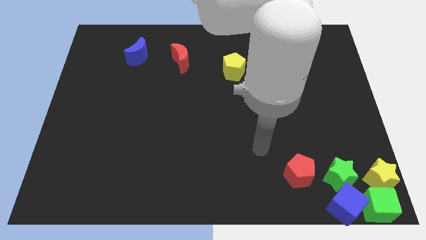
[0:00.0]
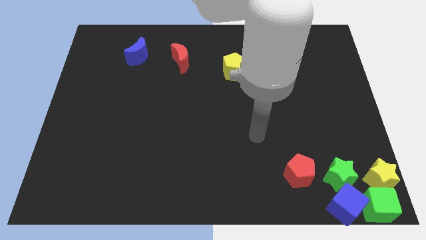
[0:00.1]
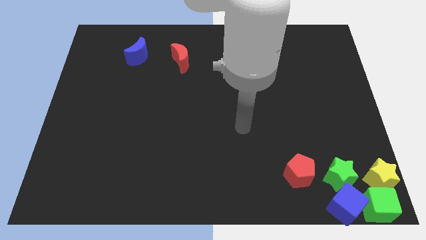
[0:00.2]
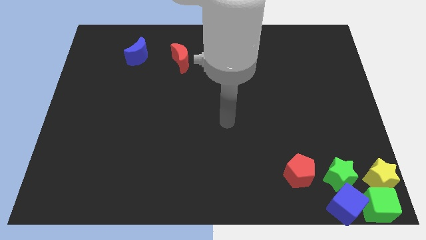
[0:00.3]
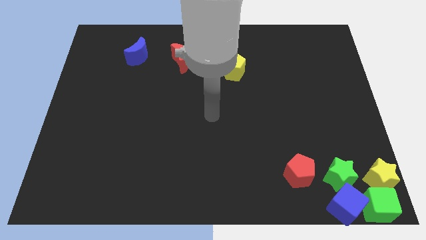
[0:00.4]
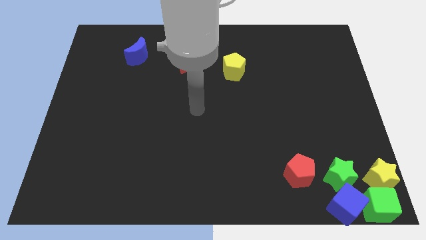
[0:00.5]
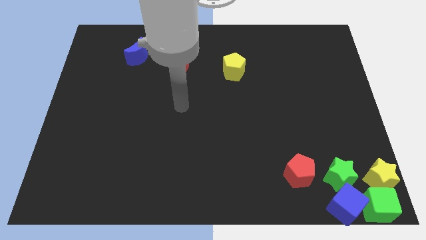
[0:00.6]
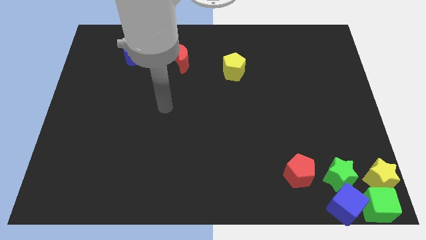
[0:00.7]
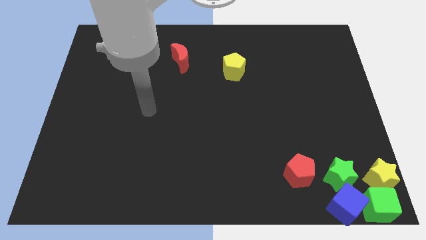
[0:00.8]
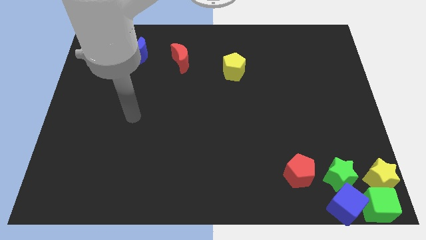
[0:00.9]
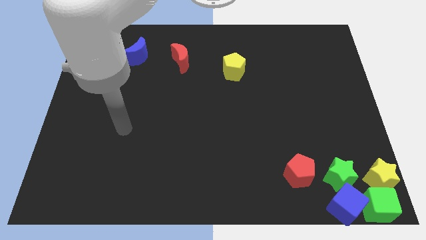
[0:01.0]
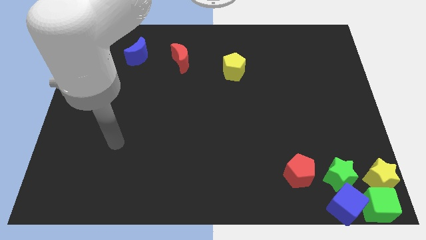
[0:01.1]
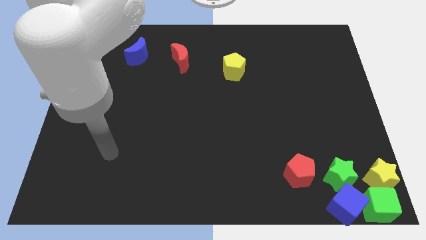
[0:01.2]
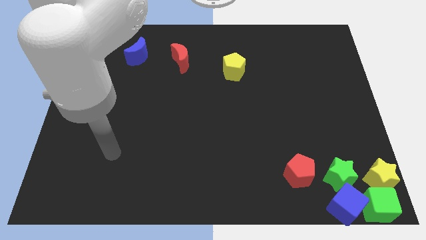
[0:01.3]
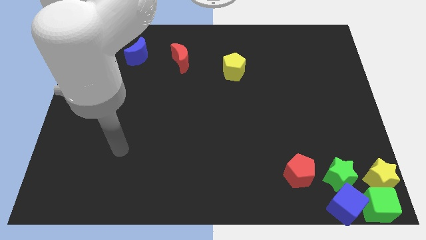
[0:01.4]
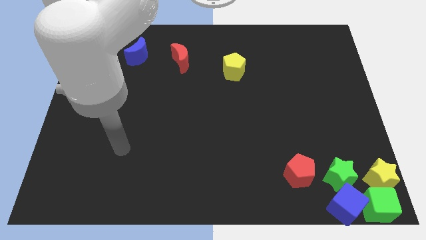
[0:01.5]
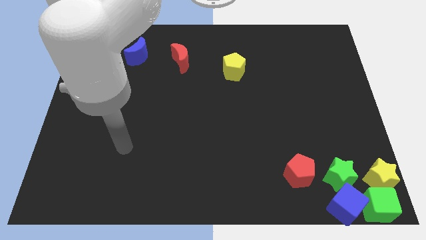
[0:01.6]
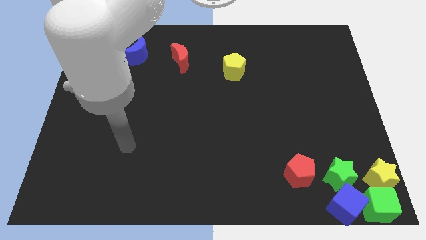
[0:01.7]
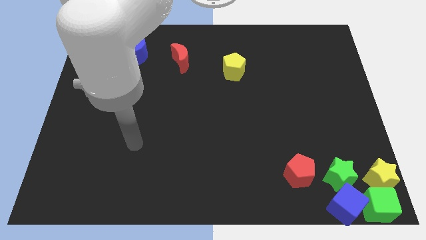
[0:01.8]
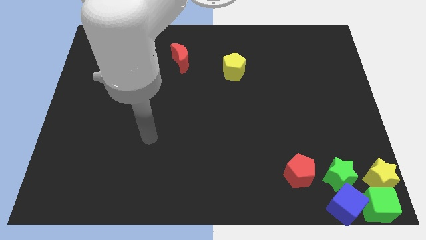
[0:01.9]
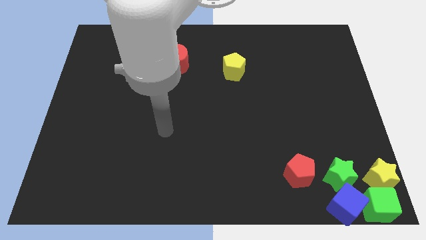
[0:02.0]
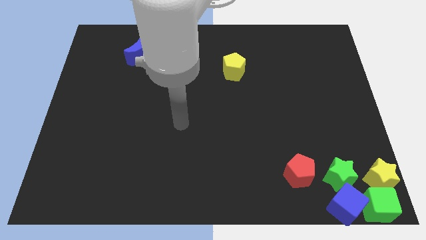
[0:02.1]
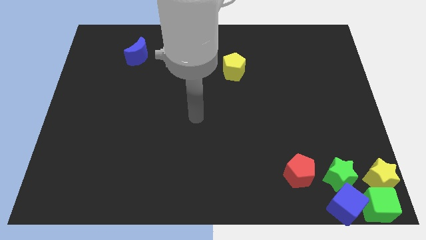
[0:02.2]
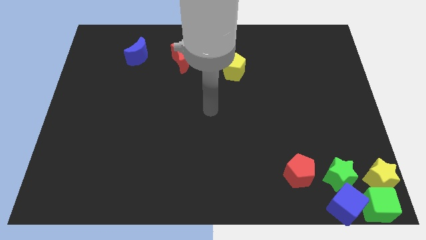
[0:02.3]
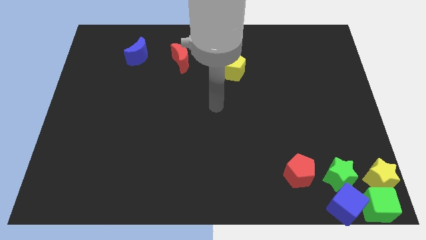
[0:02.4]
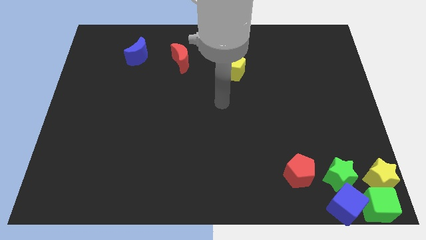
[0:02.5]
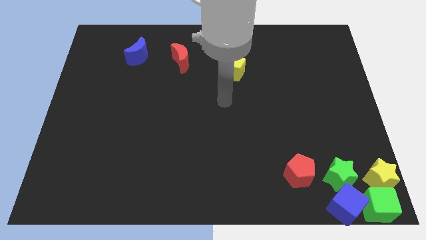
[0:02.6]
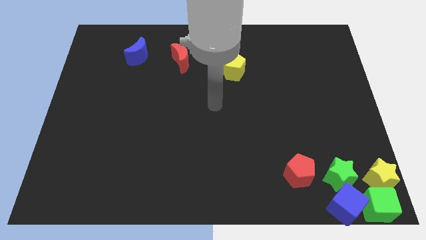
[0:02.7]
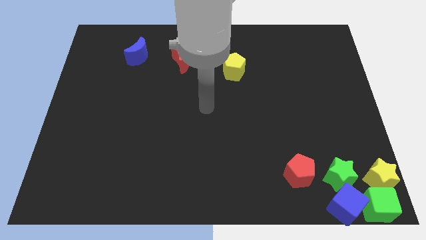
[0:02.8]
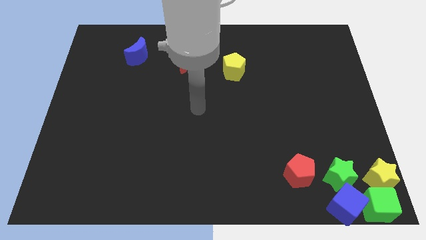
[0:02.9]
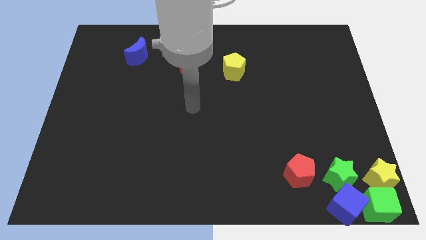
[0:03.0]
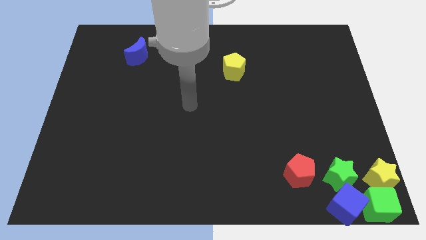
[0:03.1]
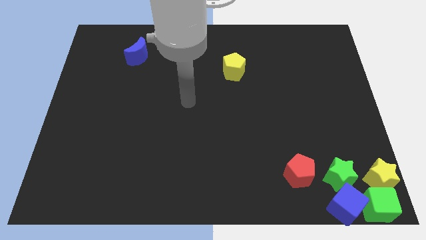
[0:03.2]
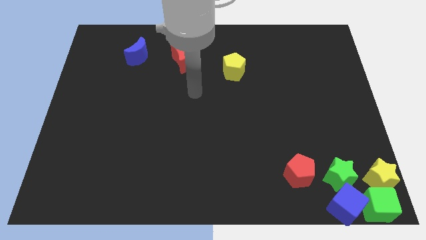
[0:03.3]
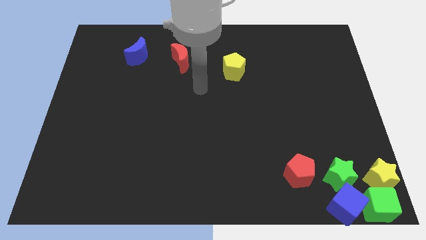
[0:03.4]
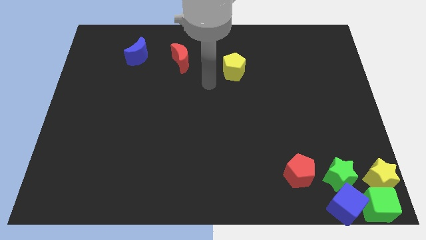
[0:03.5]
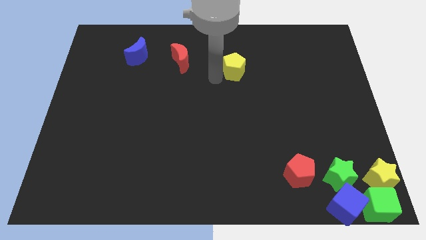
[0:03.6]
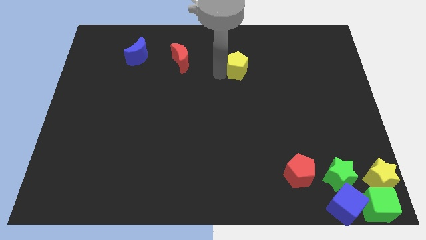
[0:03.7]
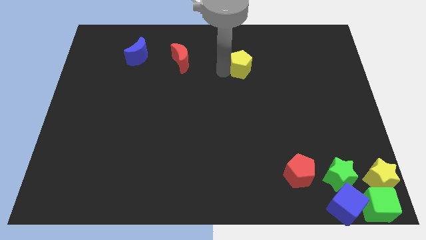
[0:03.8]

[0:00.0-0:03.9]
tap the left side of the yellow star

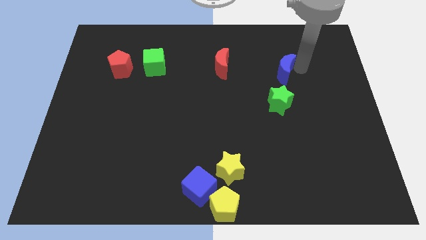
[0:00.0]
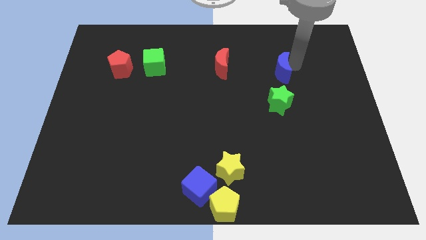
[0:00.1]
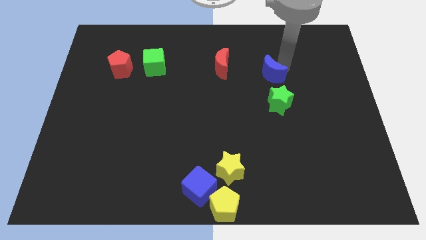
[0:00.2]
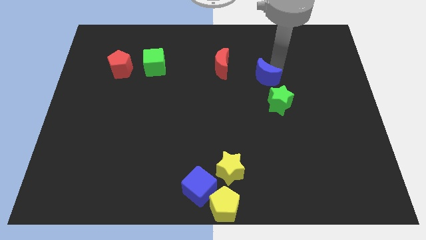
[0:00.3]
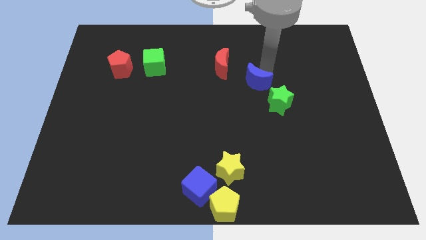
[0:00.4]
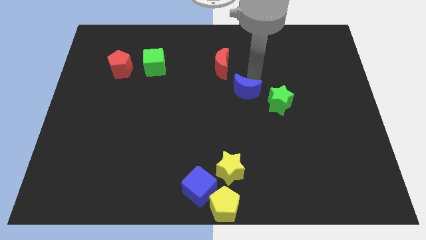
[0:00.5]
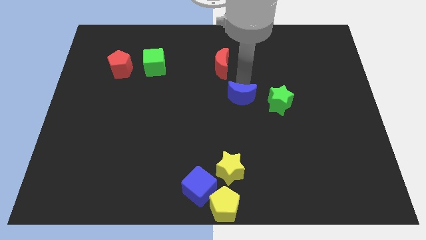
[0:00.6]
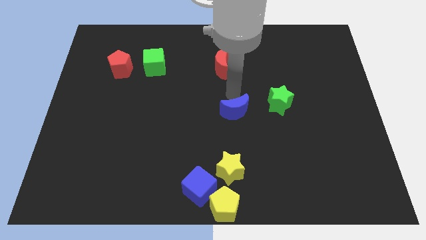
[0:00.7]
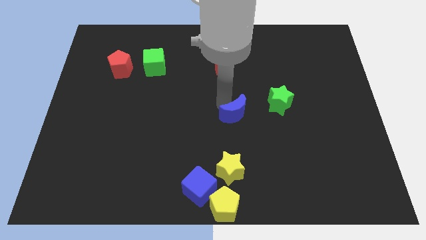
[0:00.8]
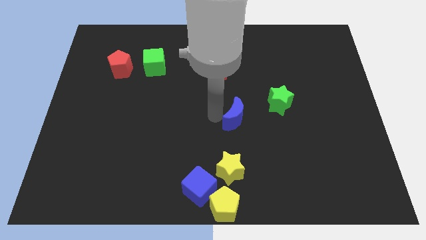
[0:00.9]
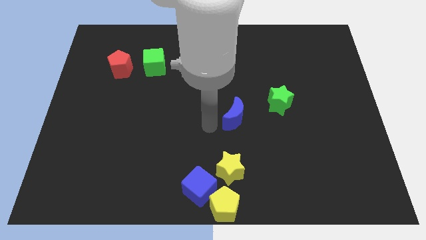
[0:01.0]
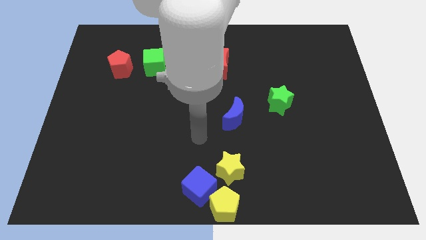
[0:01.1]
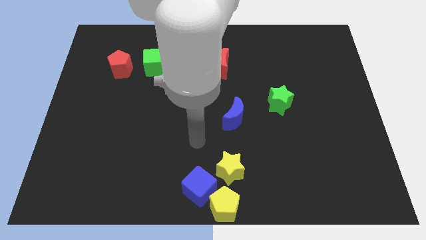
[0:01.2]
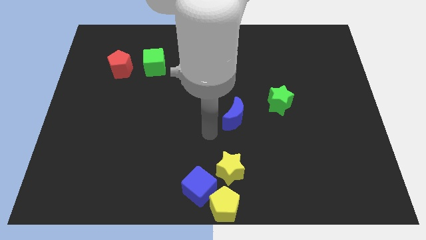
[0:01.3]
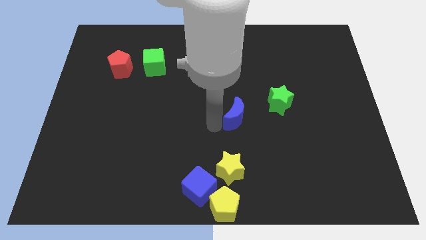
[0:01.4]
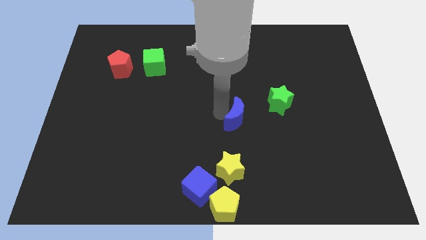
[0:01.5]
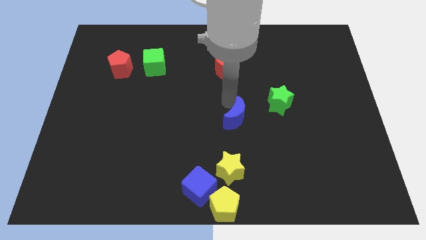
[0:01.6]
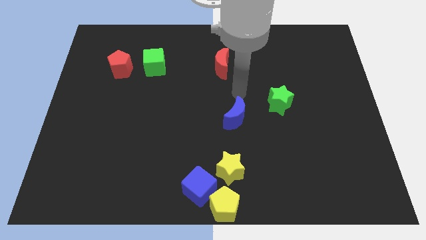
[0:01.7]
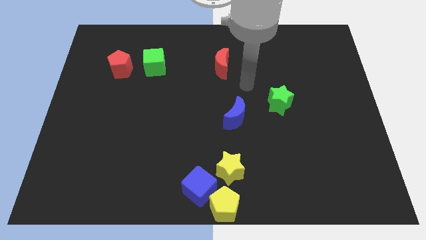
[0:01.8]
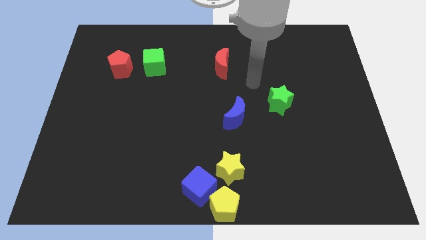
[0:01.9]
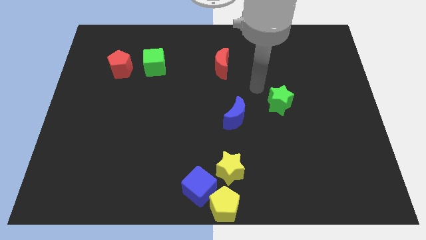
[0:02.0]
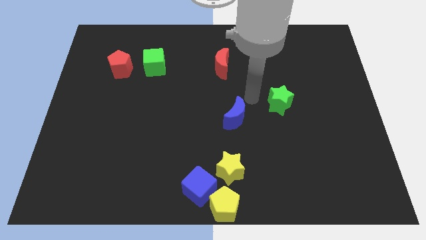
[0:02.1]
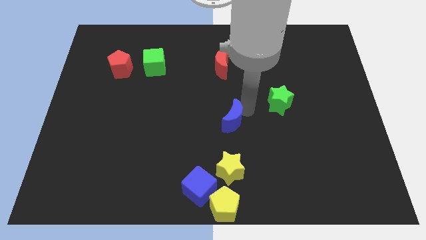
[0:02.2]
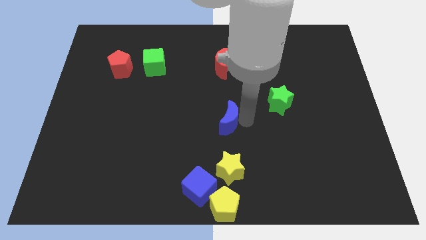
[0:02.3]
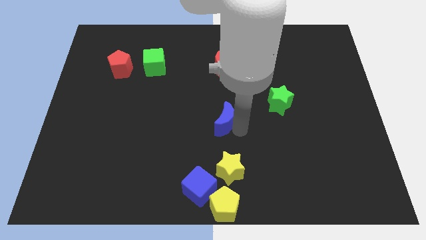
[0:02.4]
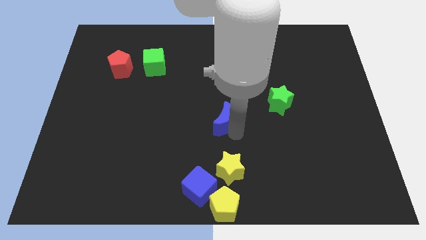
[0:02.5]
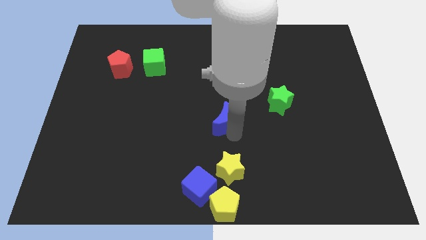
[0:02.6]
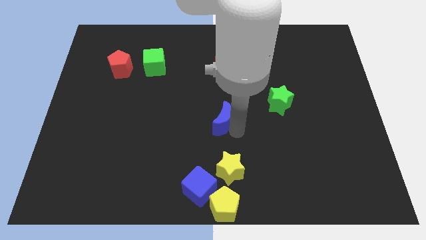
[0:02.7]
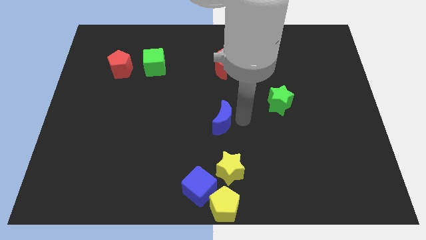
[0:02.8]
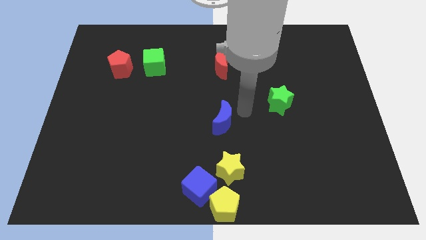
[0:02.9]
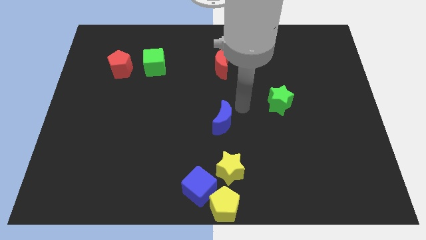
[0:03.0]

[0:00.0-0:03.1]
place the blue moon vertically above the yellow star

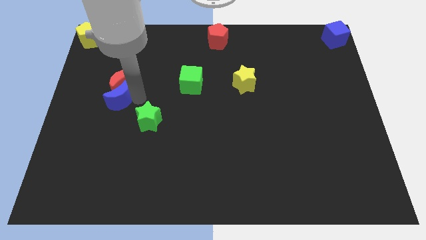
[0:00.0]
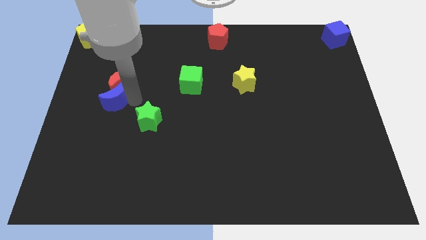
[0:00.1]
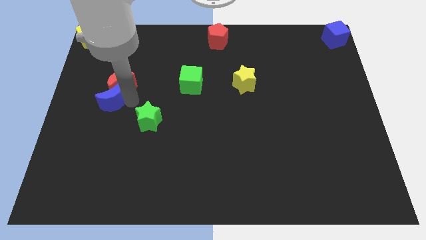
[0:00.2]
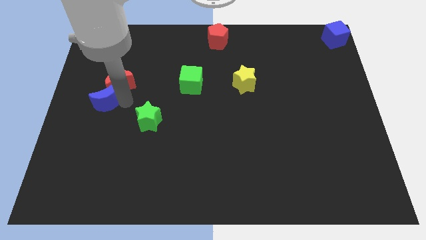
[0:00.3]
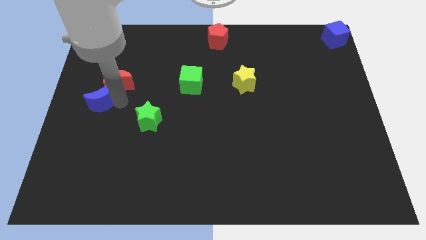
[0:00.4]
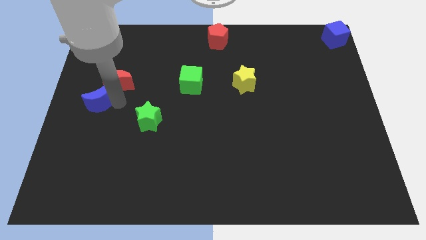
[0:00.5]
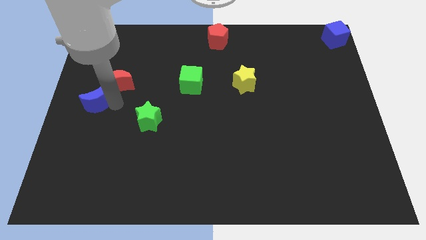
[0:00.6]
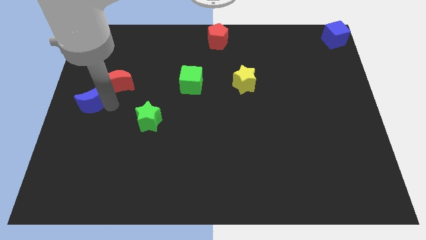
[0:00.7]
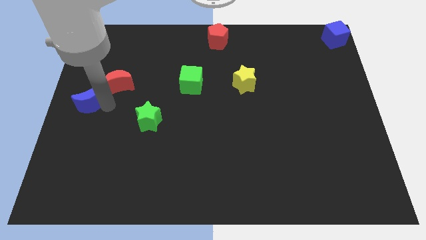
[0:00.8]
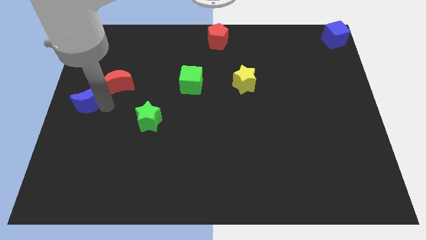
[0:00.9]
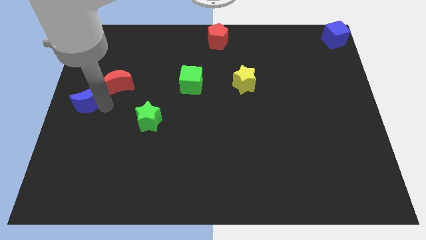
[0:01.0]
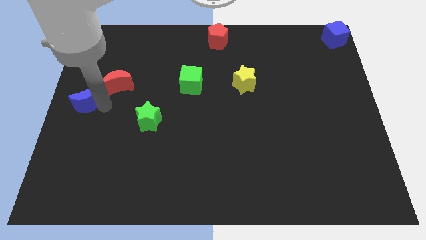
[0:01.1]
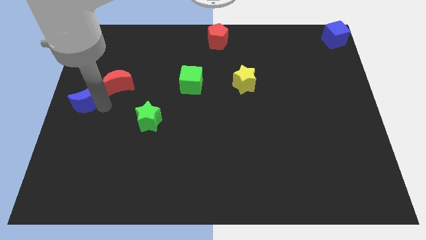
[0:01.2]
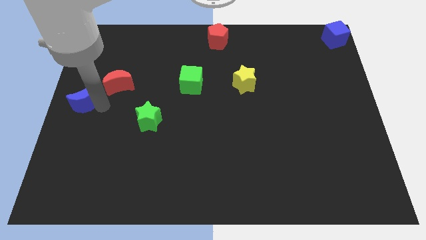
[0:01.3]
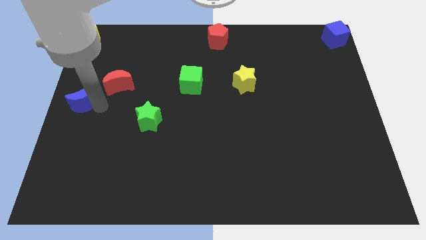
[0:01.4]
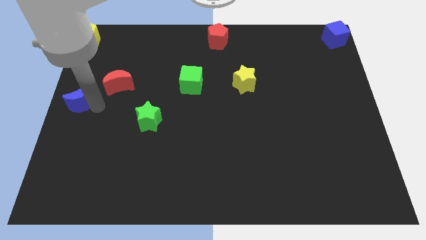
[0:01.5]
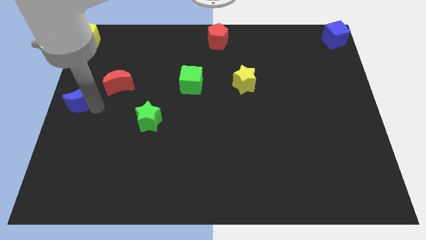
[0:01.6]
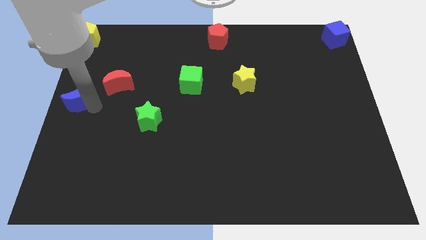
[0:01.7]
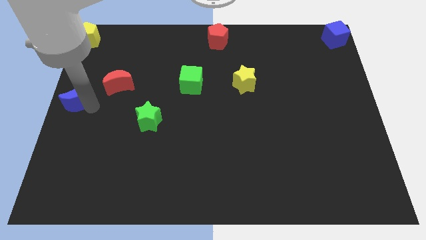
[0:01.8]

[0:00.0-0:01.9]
move the blue crescent towards the left center
